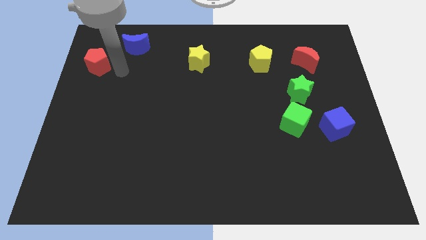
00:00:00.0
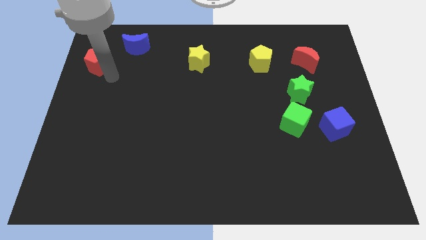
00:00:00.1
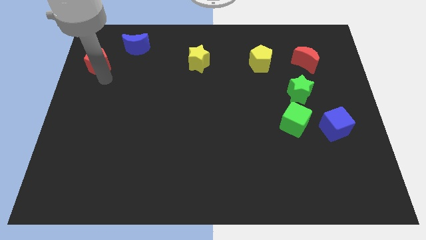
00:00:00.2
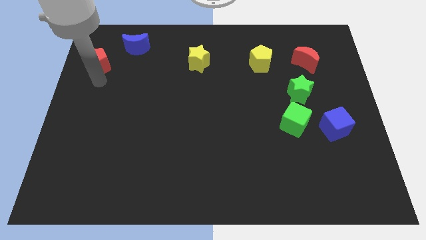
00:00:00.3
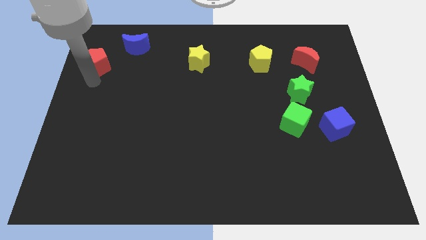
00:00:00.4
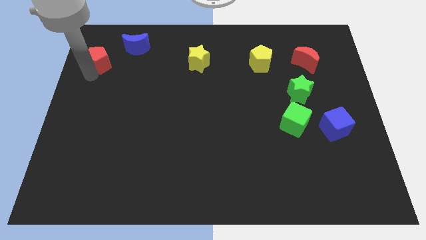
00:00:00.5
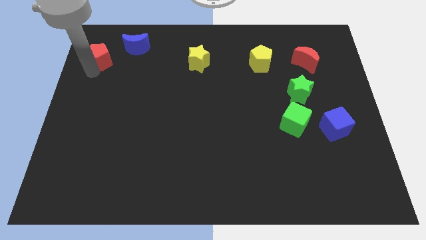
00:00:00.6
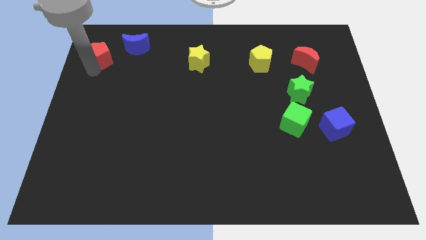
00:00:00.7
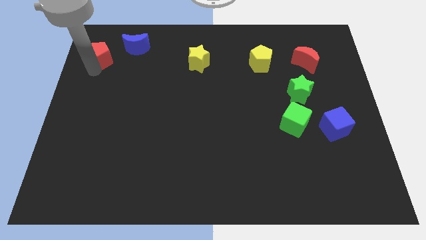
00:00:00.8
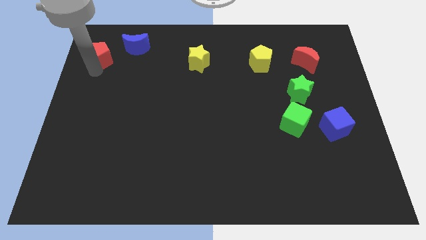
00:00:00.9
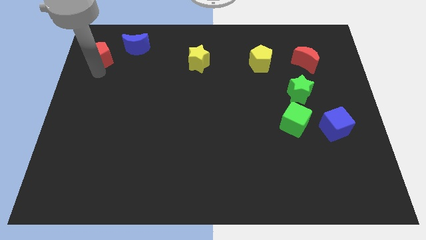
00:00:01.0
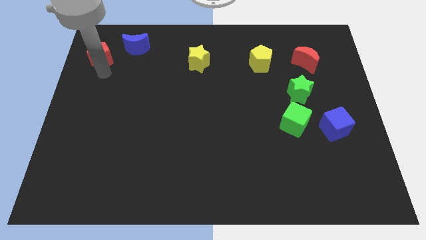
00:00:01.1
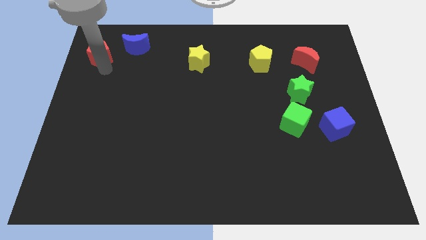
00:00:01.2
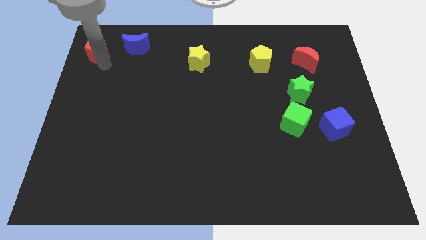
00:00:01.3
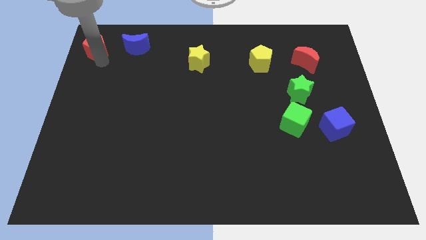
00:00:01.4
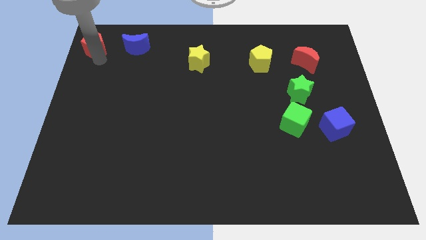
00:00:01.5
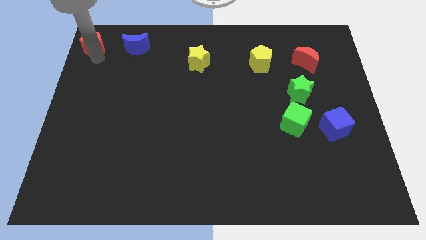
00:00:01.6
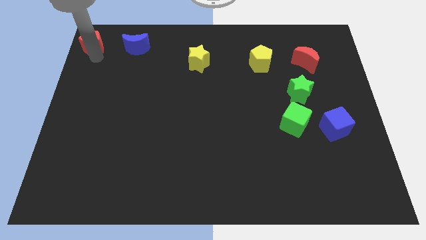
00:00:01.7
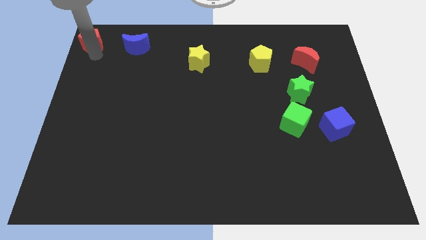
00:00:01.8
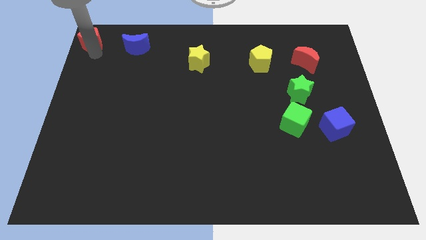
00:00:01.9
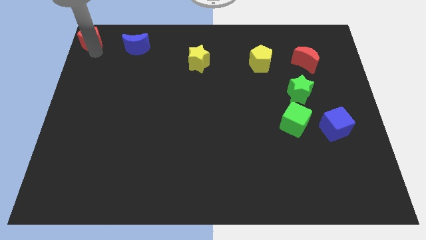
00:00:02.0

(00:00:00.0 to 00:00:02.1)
push the red pentagon to the top left

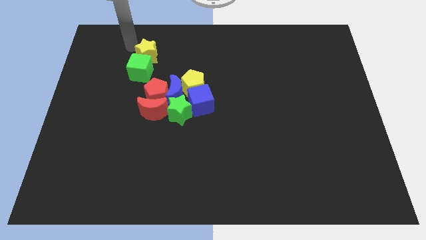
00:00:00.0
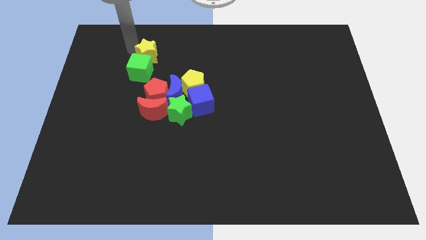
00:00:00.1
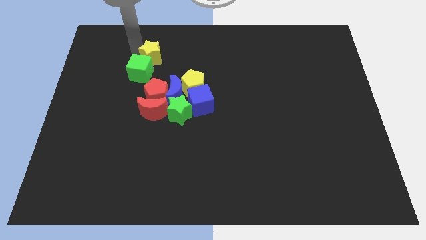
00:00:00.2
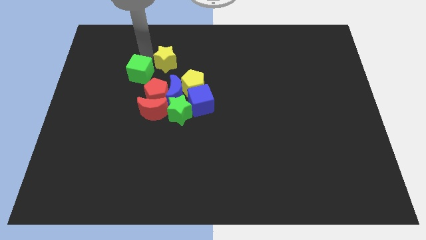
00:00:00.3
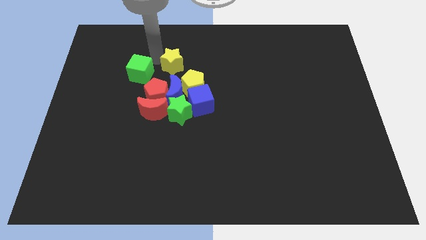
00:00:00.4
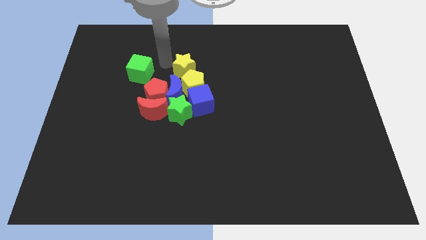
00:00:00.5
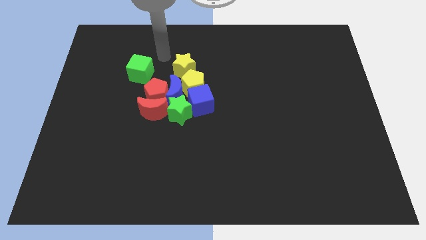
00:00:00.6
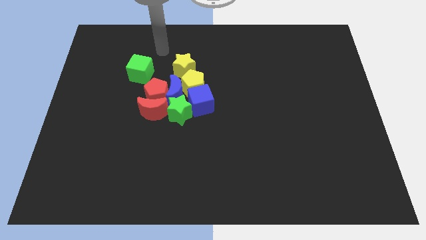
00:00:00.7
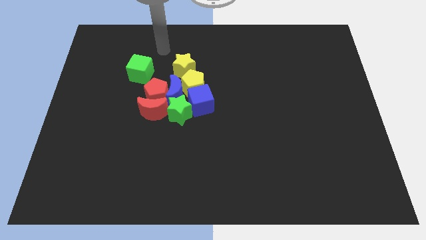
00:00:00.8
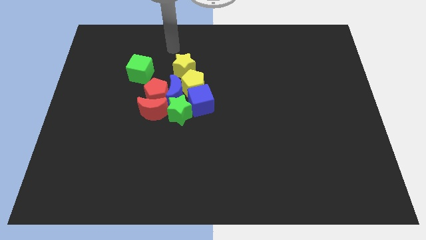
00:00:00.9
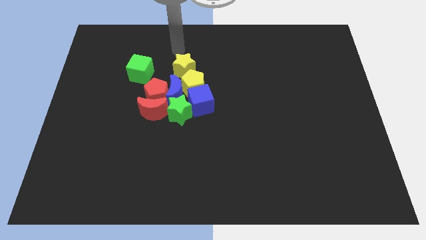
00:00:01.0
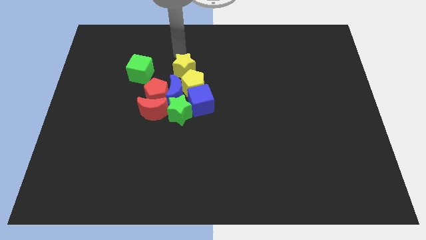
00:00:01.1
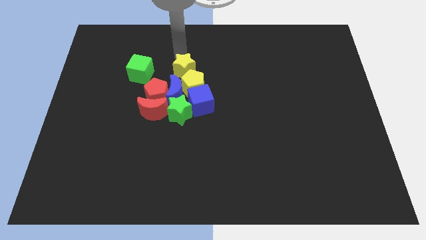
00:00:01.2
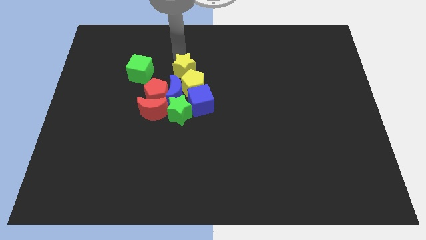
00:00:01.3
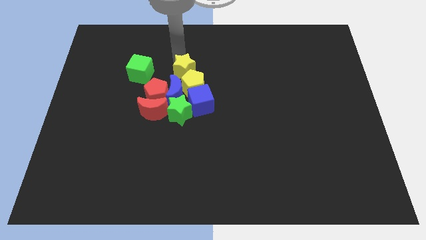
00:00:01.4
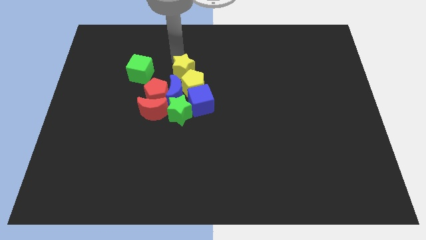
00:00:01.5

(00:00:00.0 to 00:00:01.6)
push the yellow star to the top of the yellow pentagon

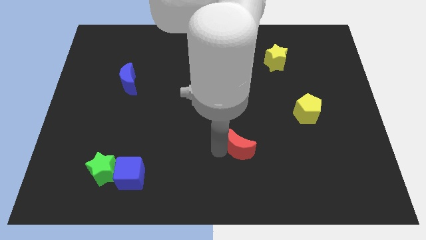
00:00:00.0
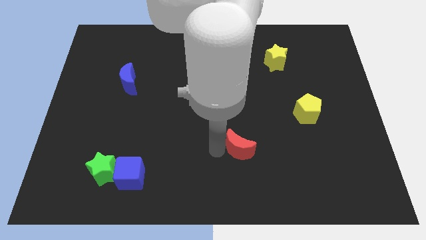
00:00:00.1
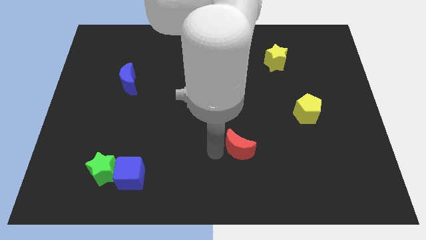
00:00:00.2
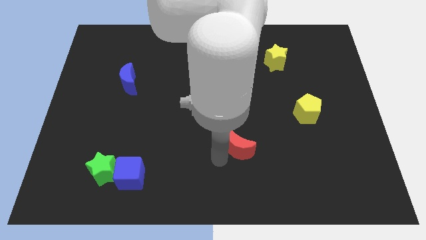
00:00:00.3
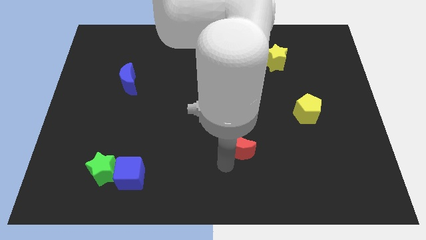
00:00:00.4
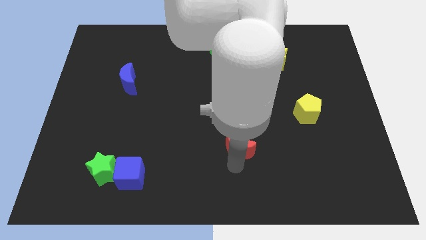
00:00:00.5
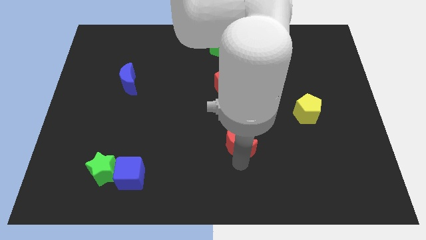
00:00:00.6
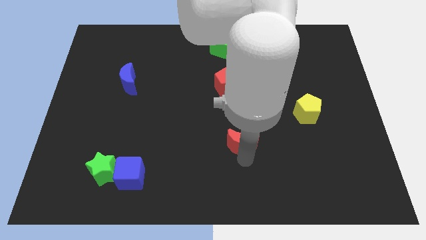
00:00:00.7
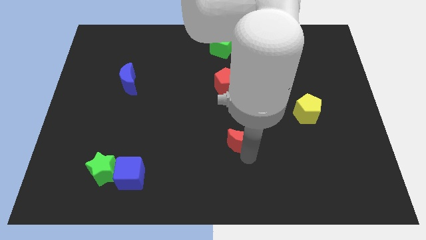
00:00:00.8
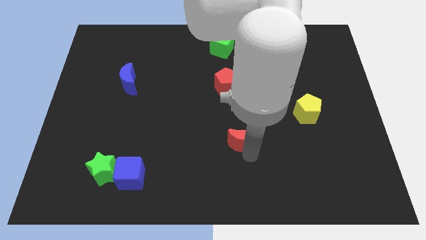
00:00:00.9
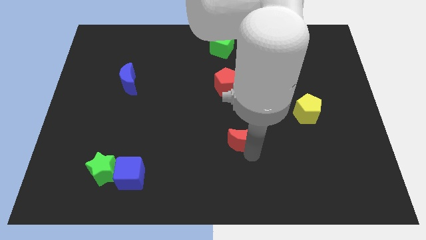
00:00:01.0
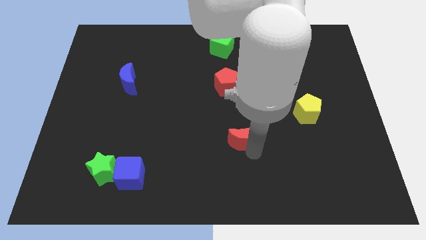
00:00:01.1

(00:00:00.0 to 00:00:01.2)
place the red moon diagonally below the bottom left side of the yellow pentagon

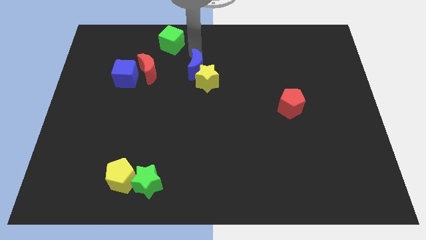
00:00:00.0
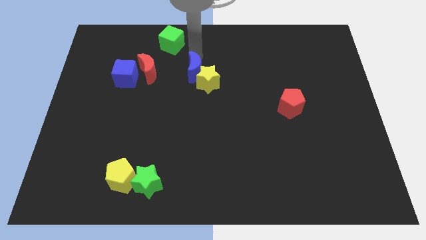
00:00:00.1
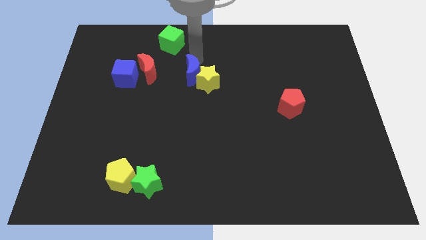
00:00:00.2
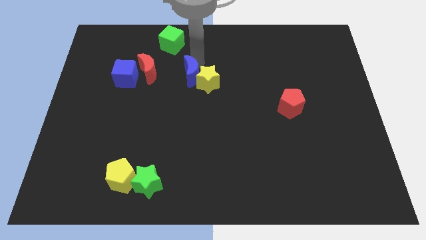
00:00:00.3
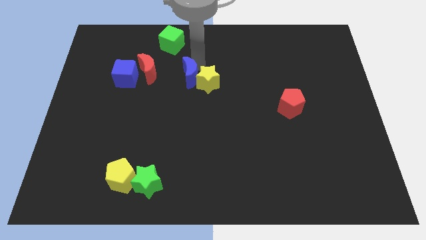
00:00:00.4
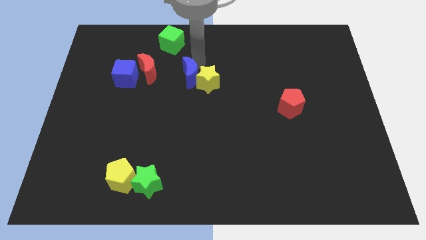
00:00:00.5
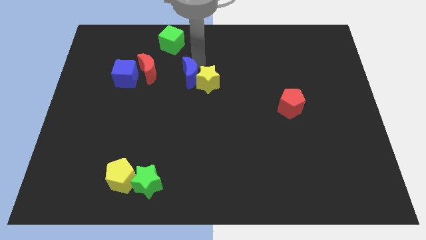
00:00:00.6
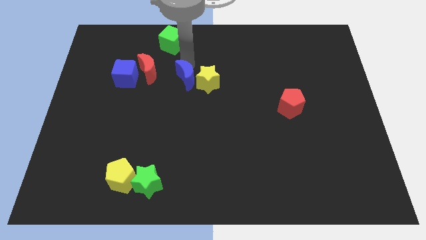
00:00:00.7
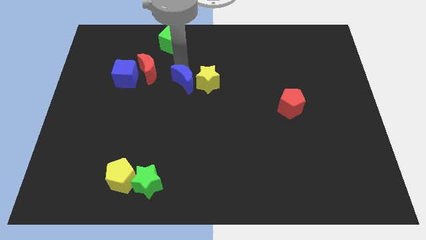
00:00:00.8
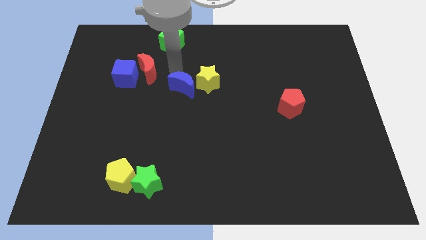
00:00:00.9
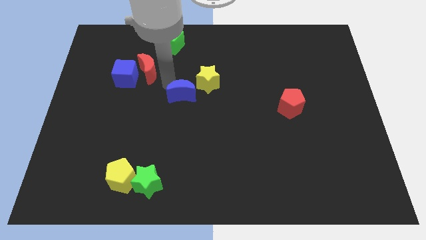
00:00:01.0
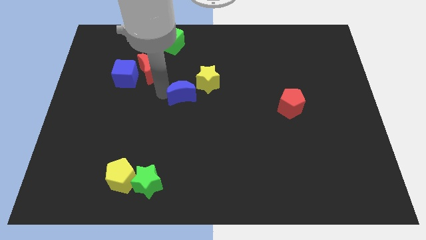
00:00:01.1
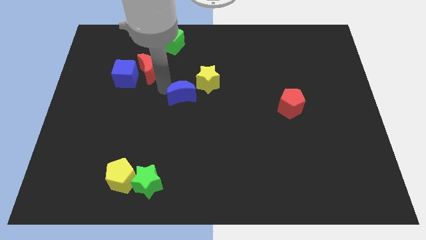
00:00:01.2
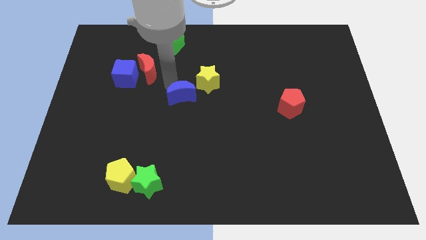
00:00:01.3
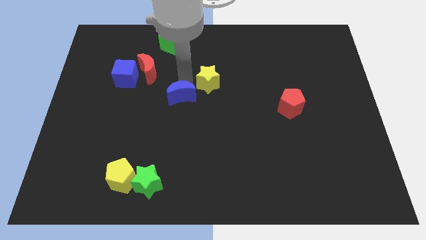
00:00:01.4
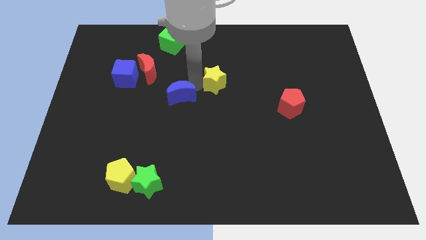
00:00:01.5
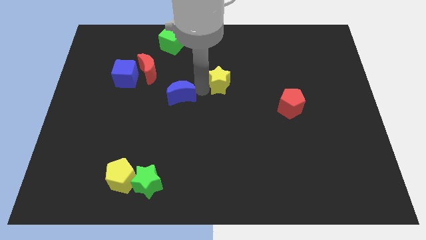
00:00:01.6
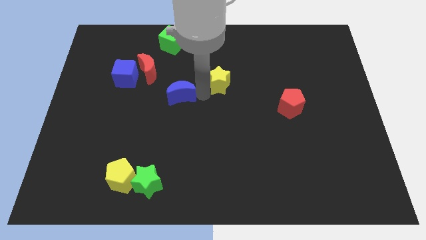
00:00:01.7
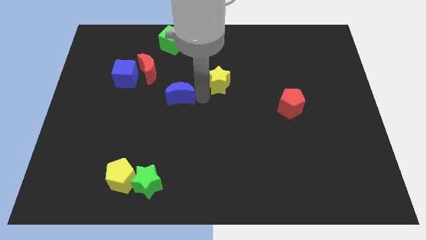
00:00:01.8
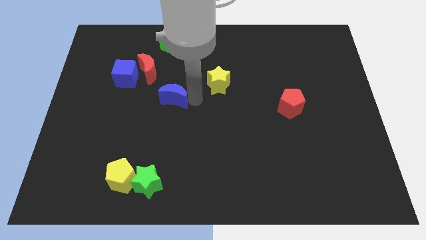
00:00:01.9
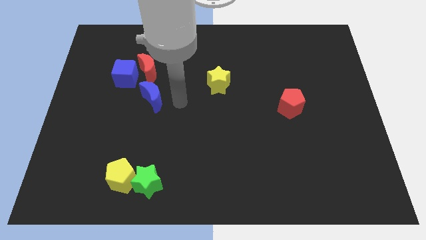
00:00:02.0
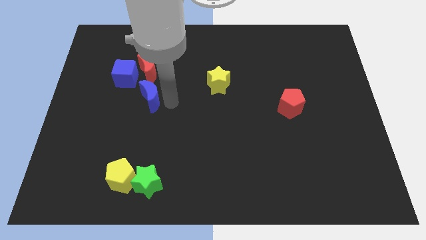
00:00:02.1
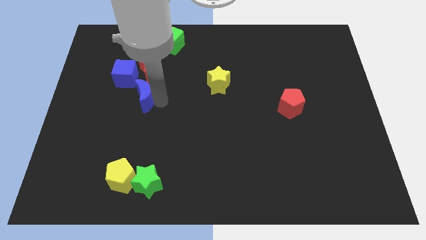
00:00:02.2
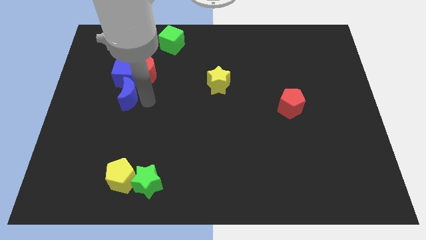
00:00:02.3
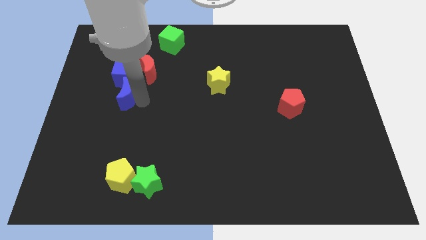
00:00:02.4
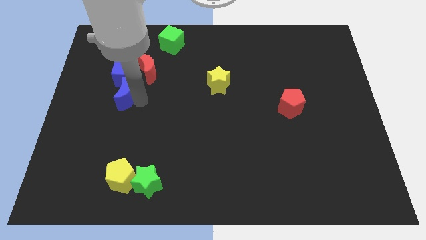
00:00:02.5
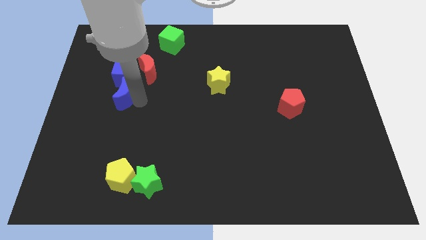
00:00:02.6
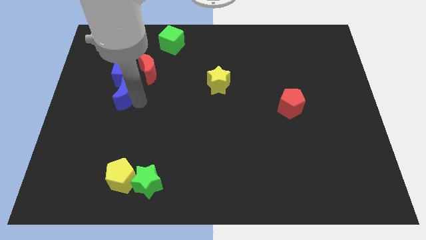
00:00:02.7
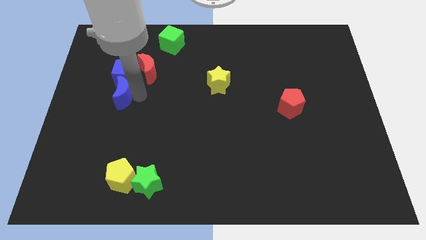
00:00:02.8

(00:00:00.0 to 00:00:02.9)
place blue crescent below blue cube

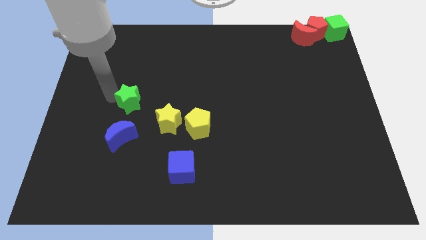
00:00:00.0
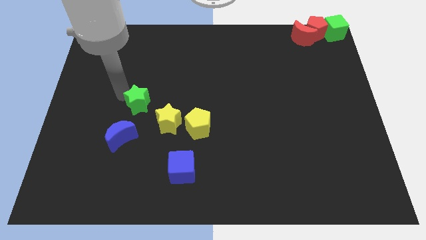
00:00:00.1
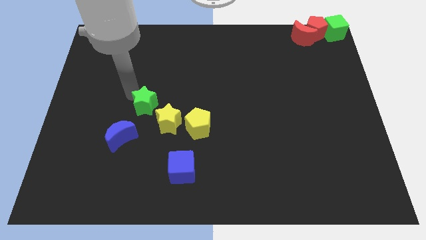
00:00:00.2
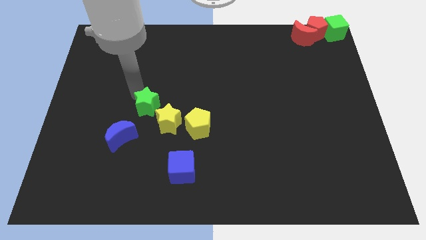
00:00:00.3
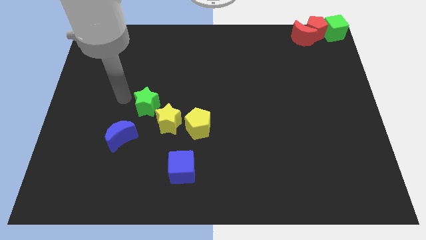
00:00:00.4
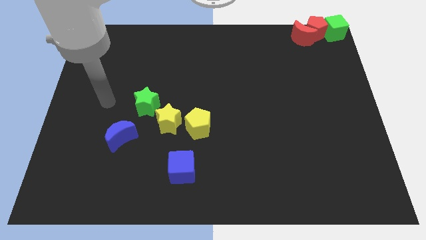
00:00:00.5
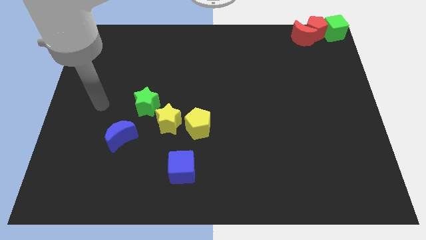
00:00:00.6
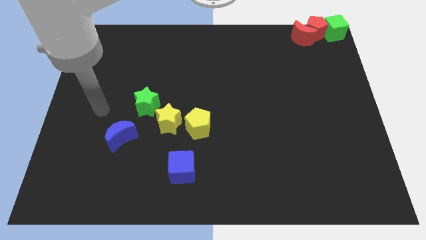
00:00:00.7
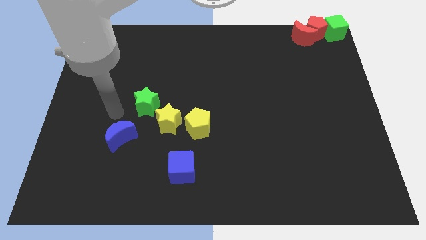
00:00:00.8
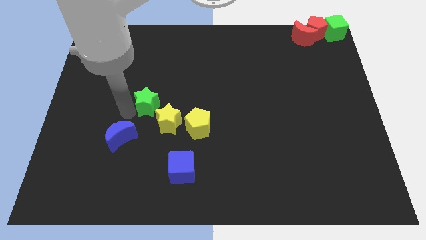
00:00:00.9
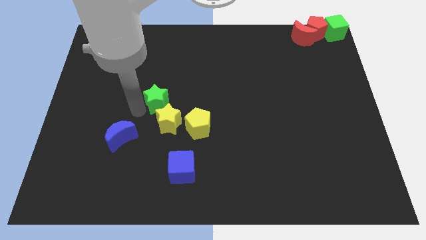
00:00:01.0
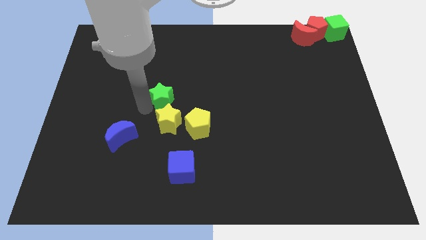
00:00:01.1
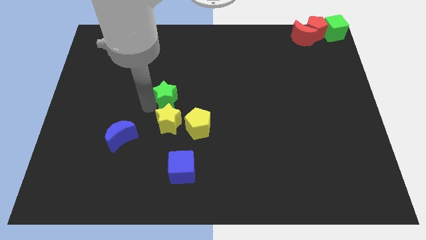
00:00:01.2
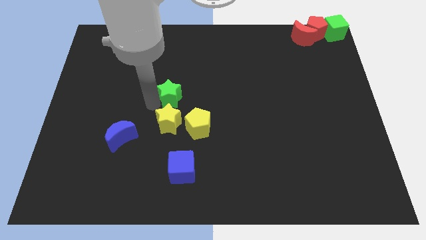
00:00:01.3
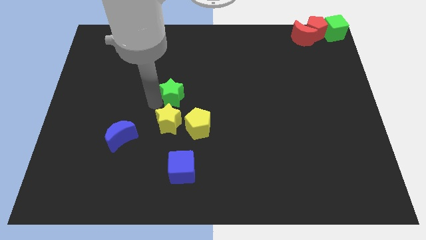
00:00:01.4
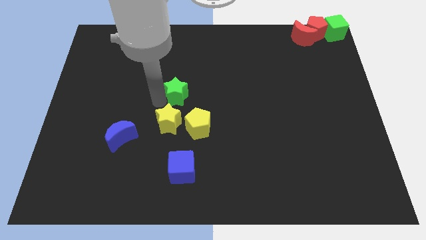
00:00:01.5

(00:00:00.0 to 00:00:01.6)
place the green star above the yellow star
